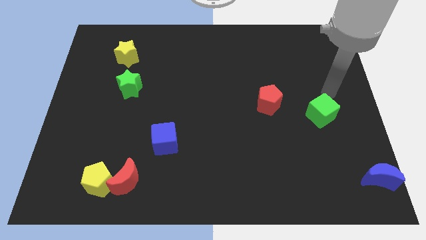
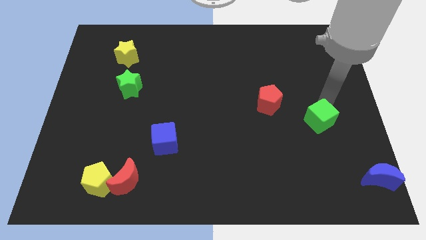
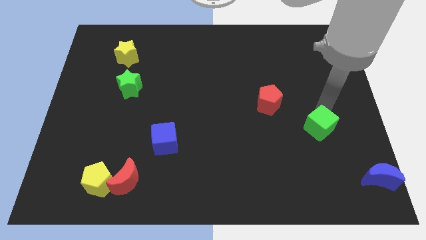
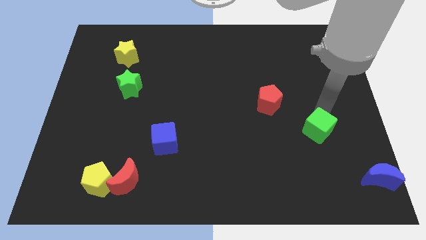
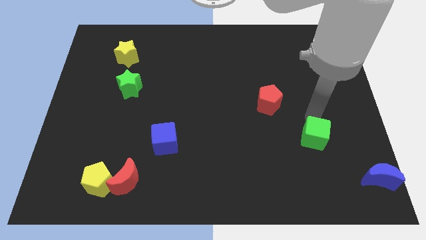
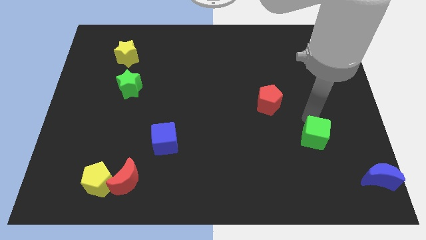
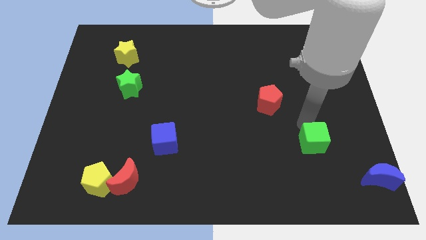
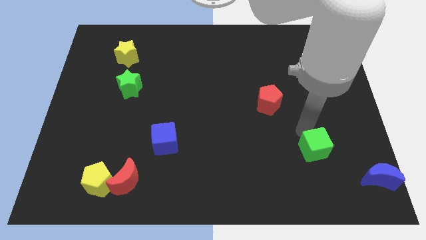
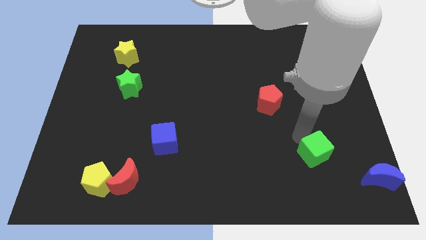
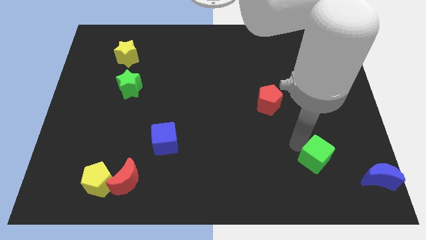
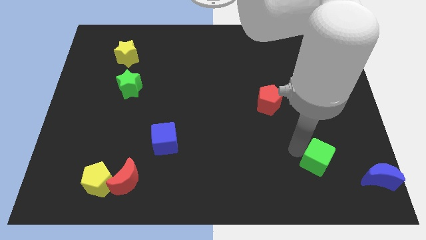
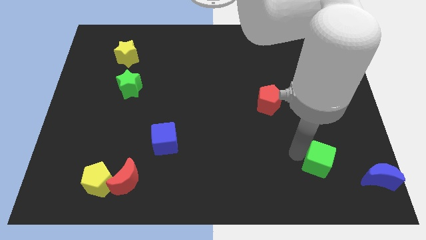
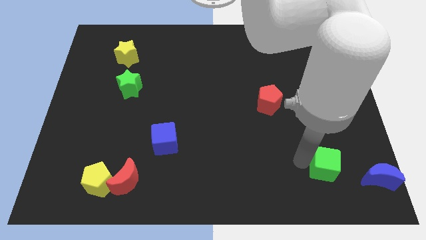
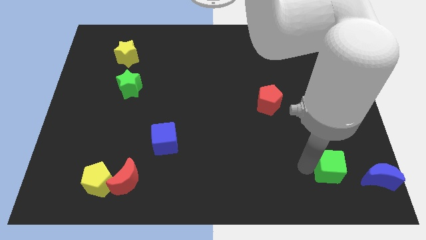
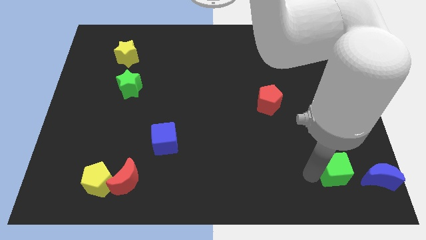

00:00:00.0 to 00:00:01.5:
place green cube parallel to blue moon

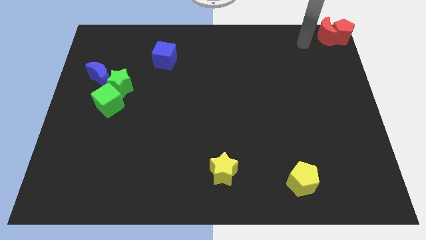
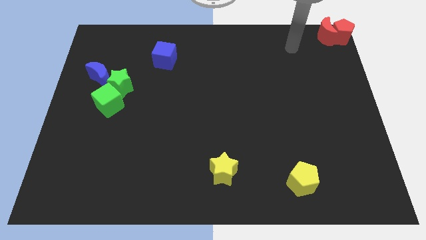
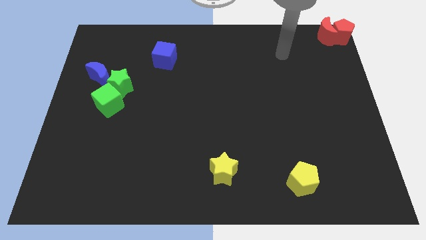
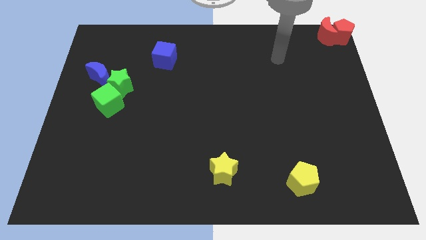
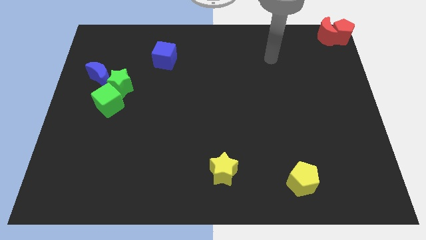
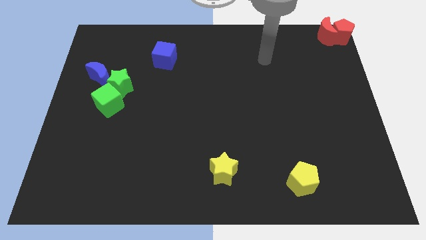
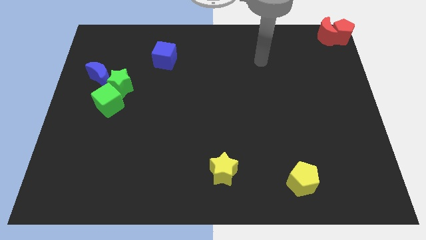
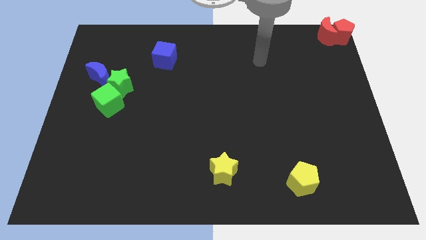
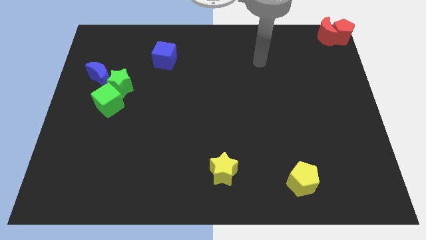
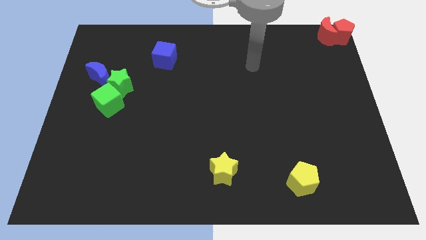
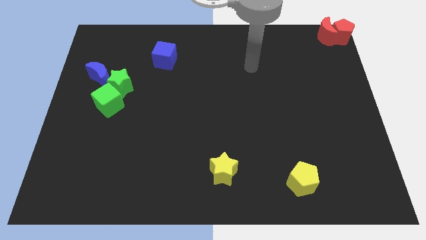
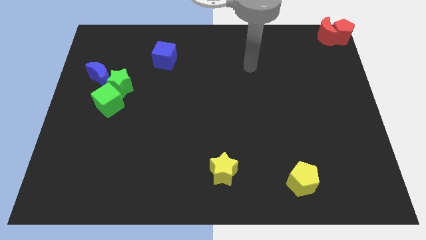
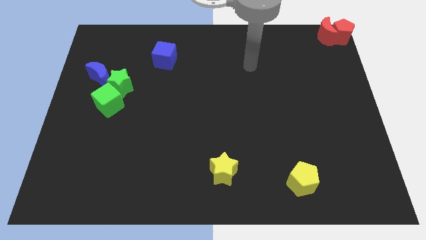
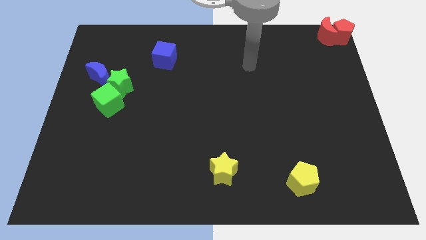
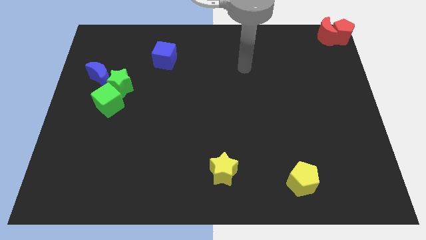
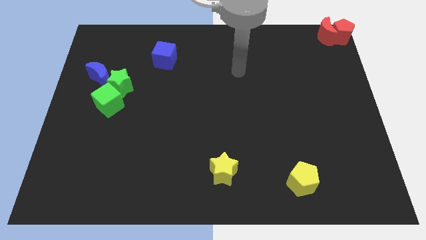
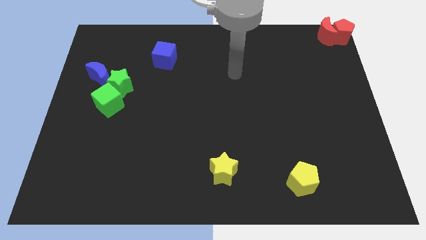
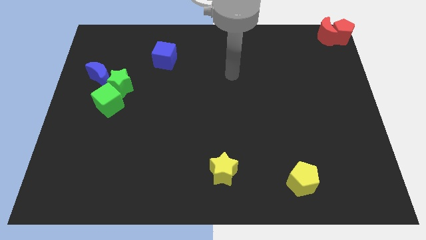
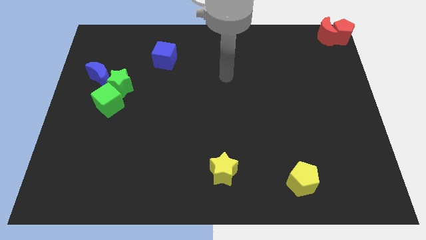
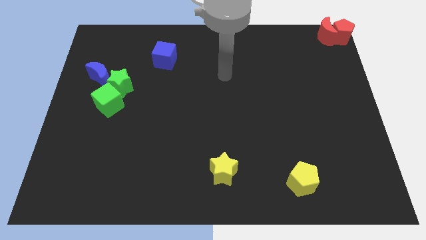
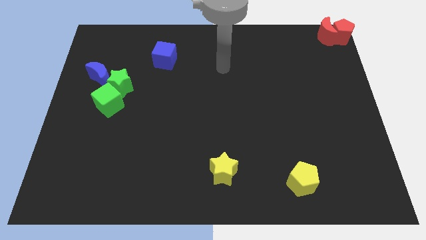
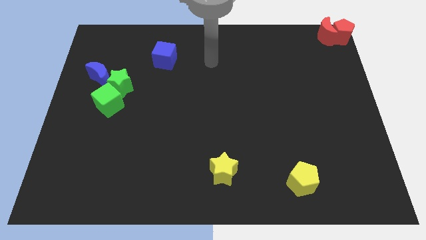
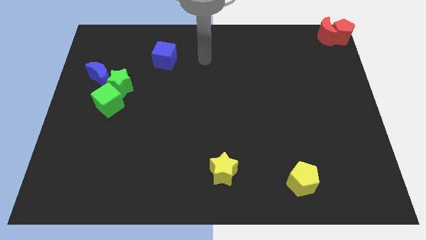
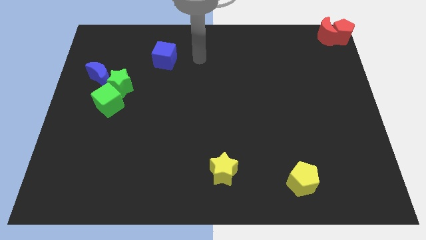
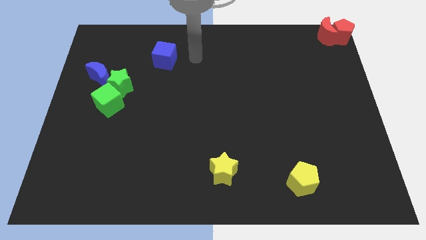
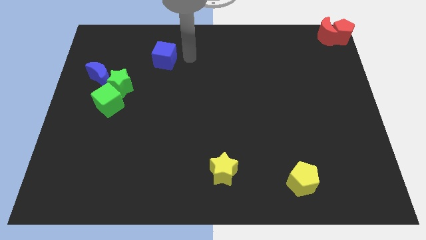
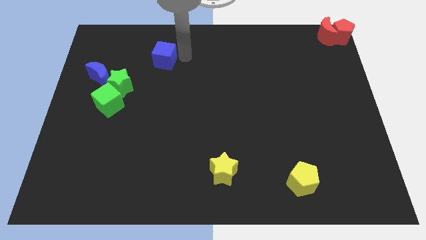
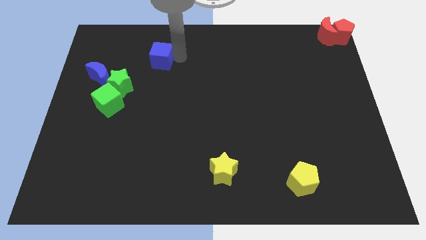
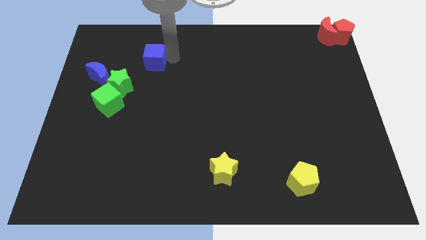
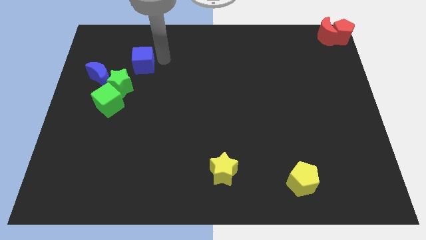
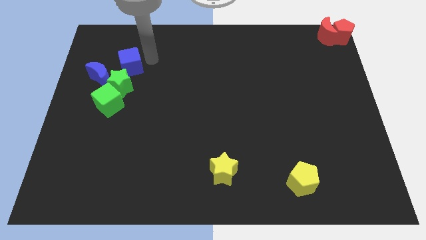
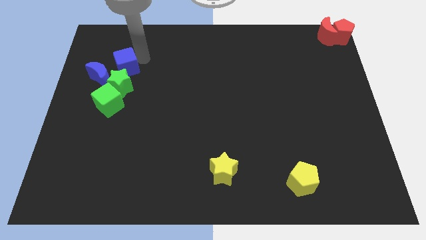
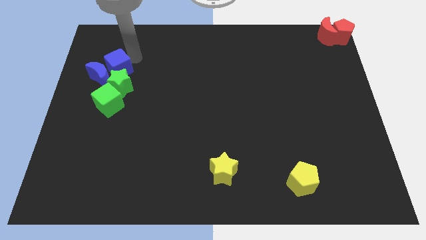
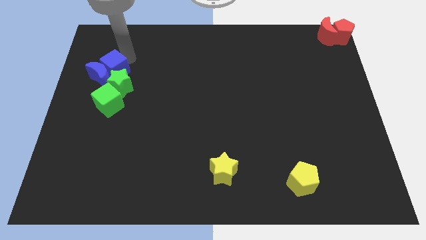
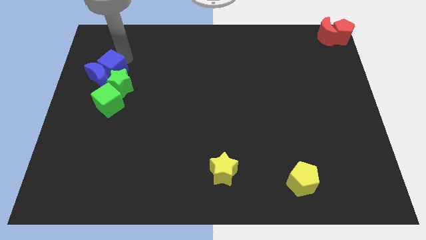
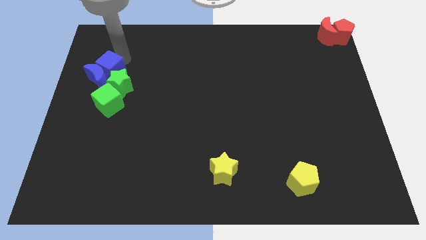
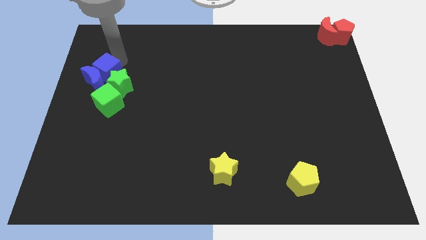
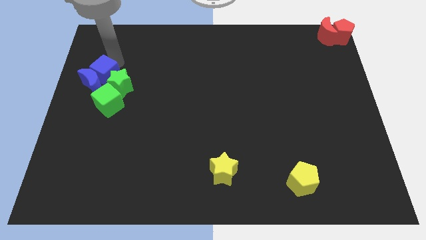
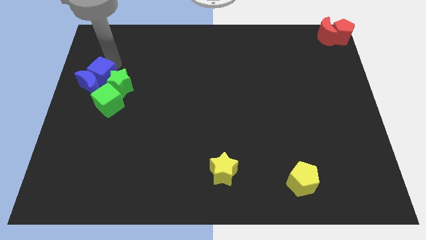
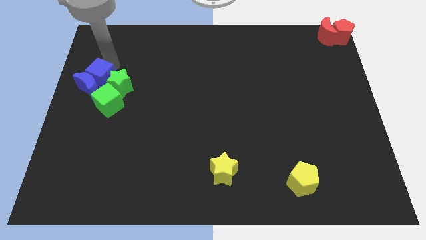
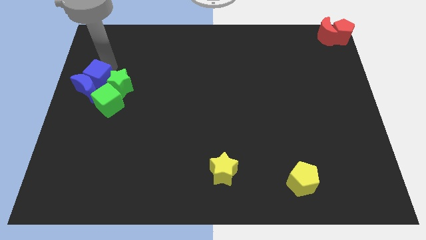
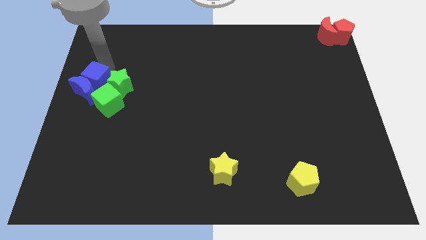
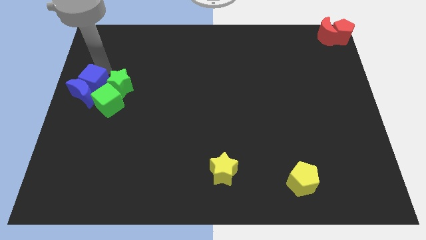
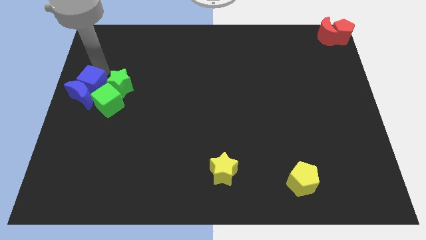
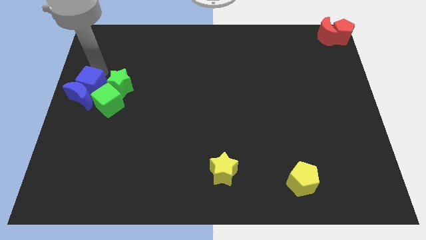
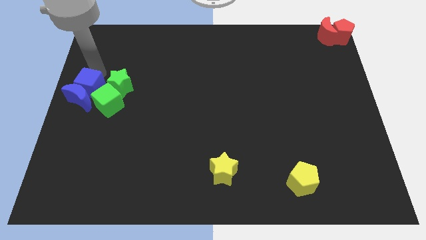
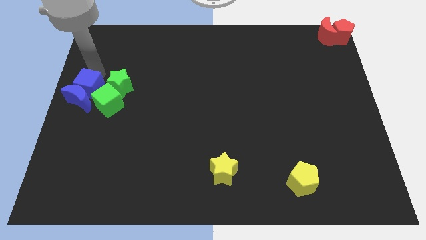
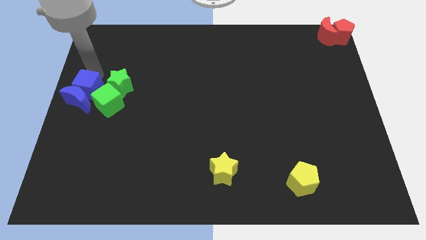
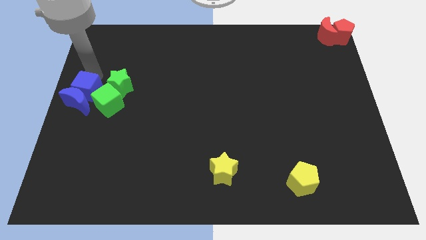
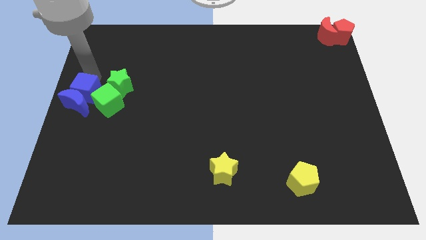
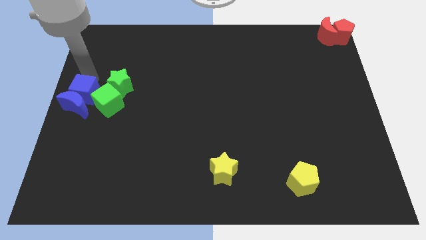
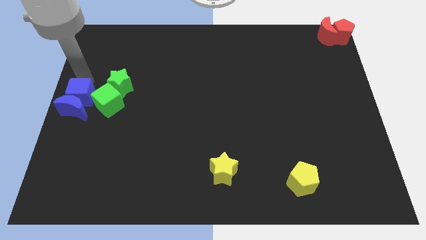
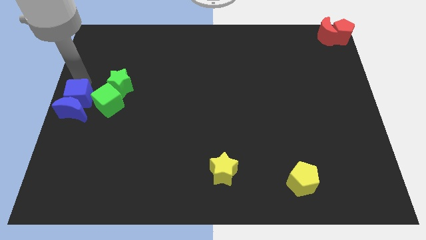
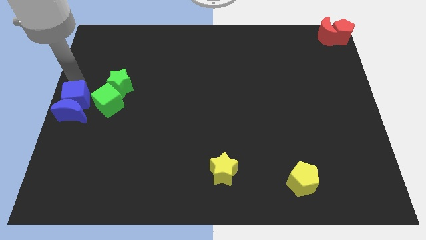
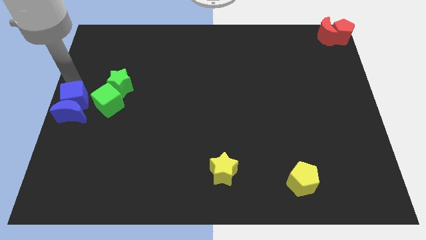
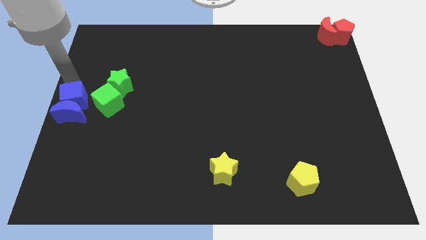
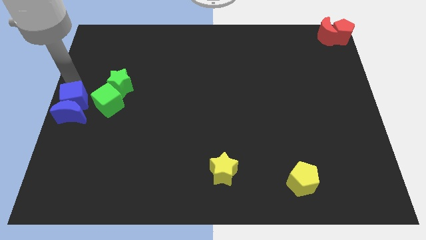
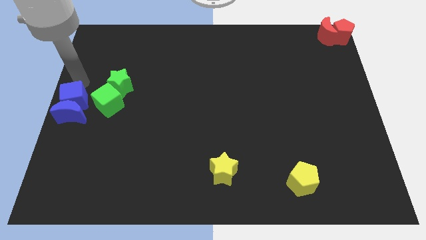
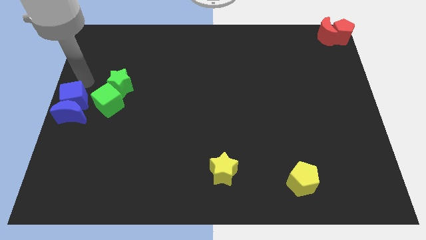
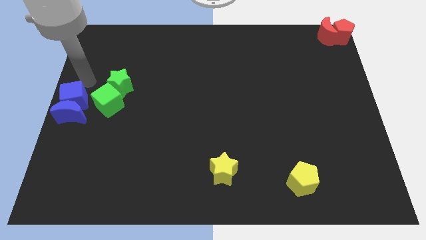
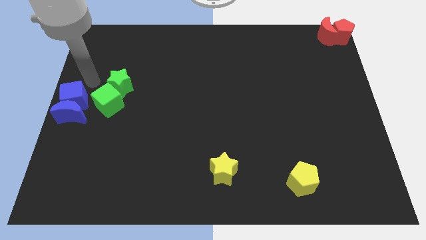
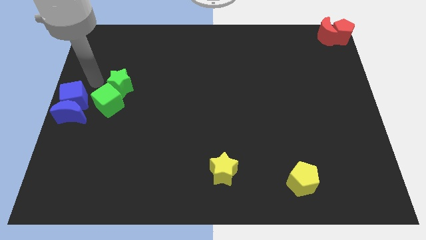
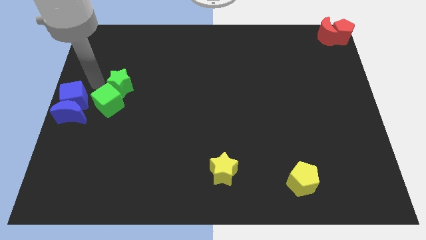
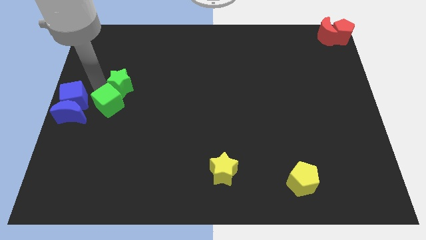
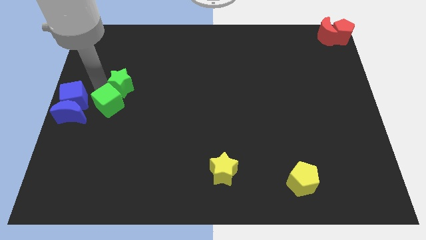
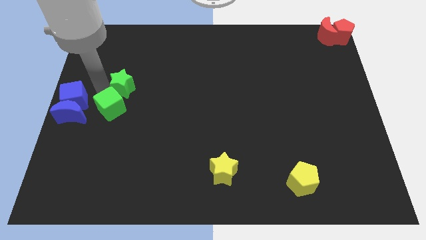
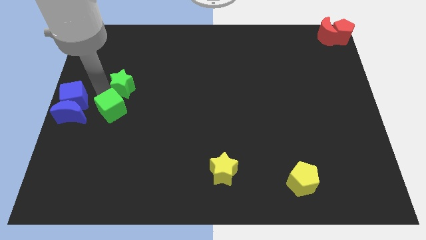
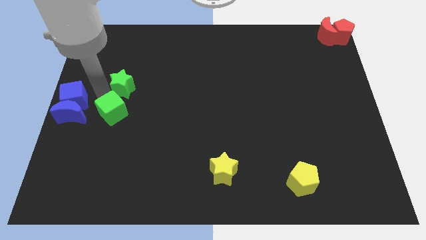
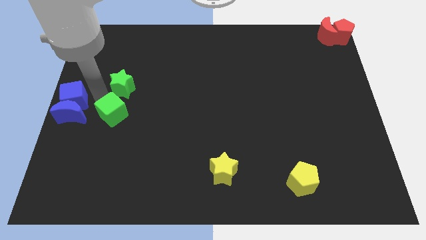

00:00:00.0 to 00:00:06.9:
slide both the blue blocks at the center left

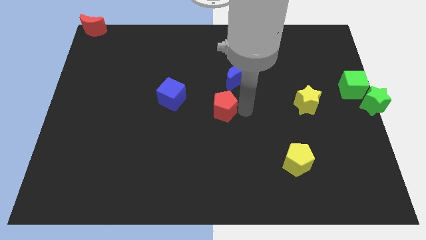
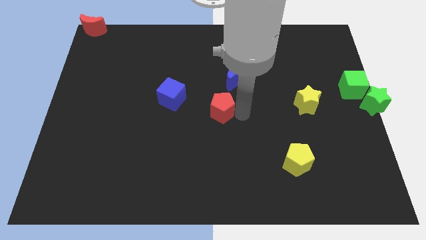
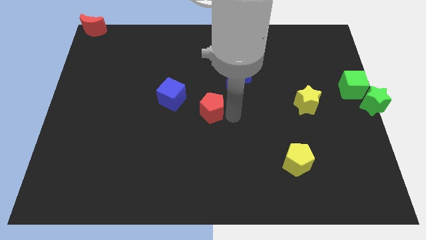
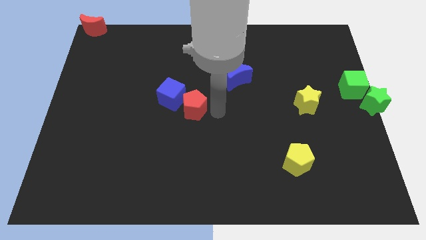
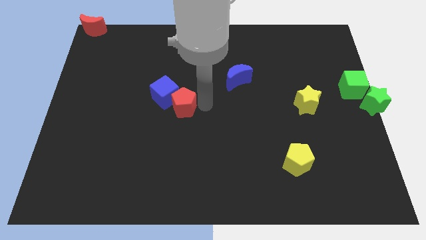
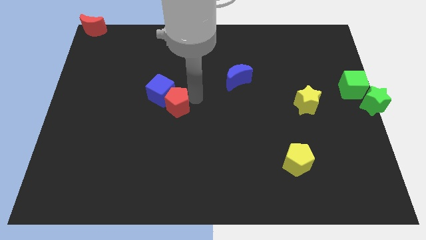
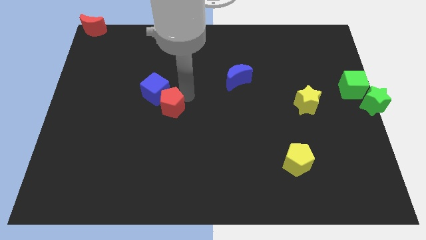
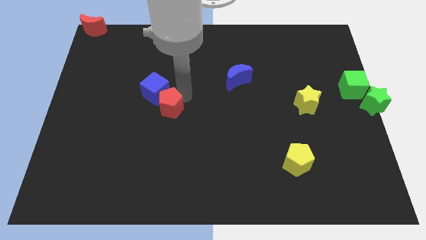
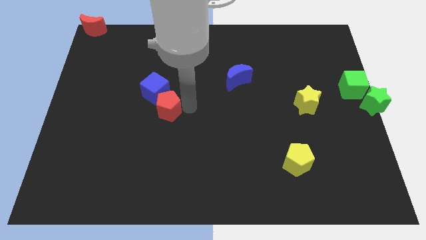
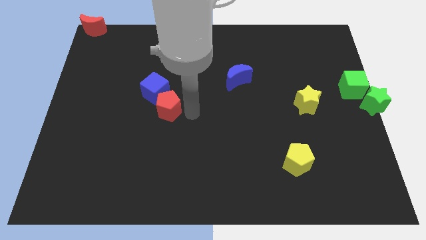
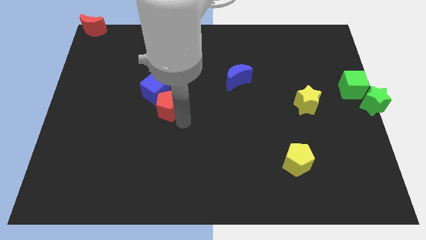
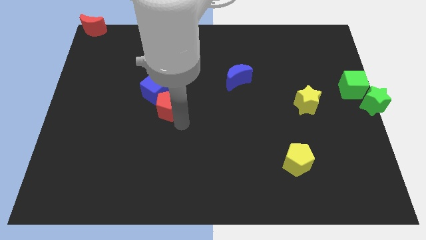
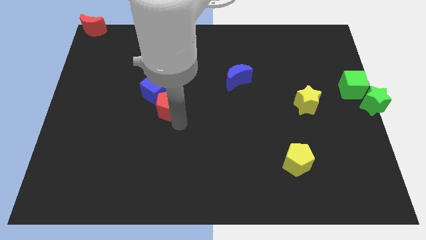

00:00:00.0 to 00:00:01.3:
push the red pentagon into the bottom of the blue cube
